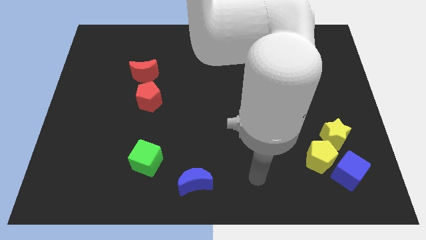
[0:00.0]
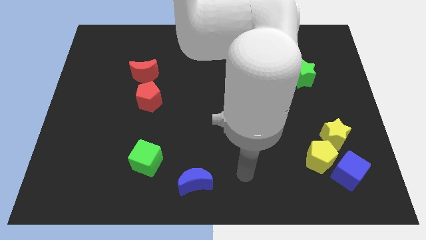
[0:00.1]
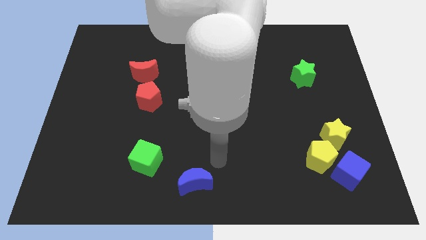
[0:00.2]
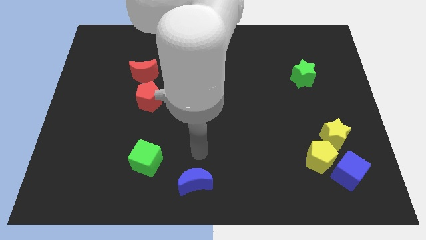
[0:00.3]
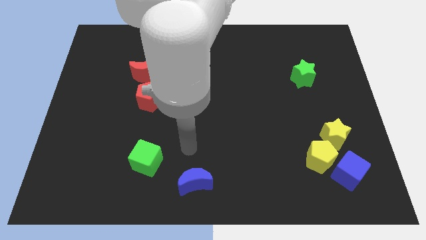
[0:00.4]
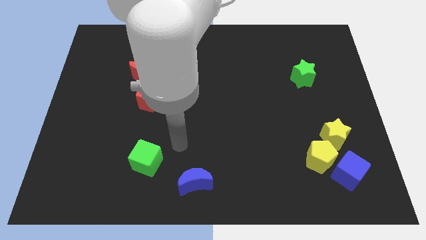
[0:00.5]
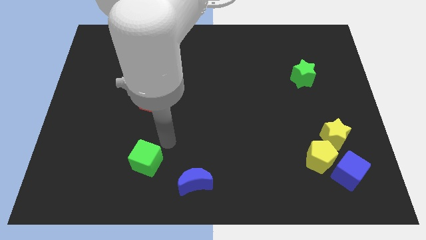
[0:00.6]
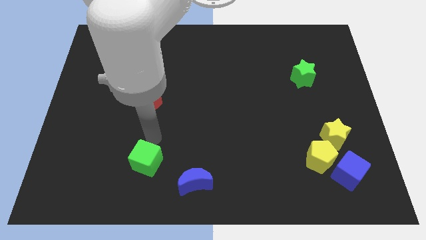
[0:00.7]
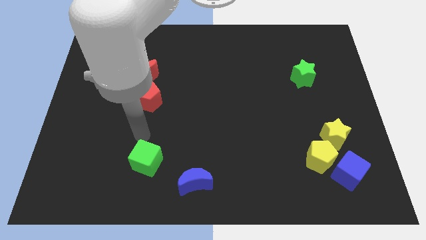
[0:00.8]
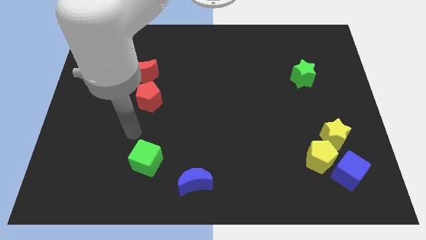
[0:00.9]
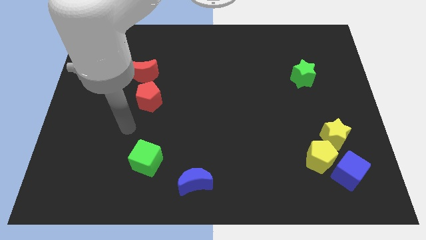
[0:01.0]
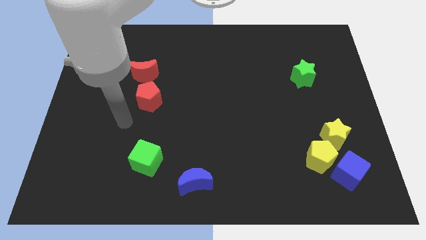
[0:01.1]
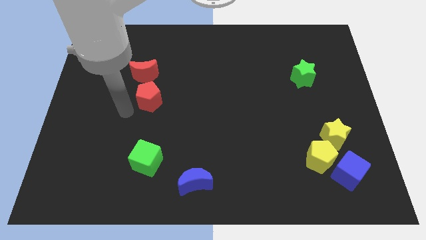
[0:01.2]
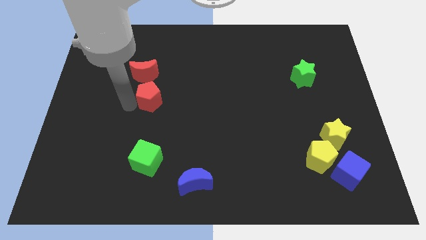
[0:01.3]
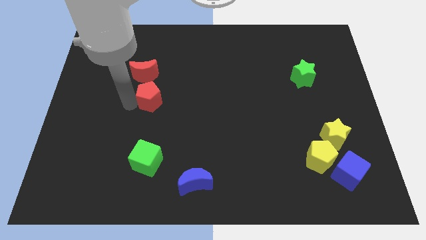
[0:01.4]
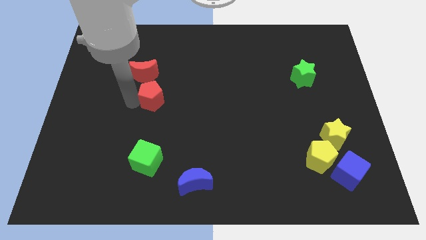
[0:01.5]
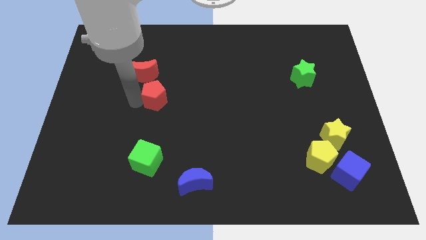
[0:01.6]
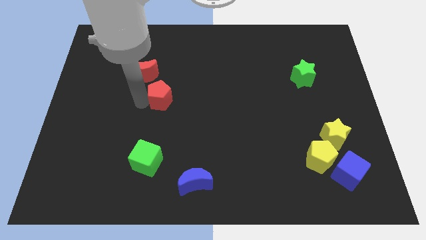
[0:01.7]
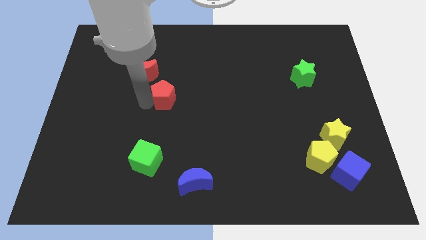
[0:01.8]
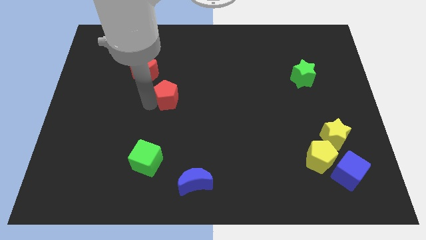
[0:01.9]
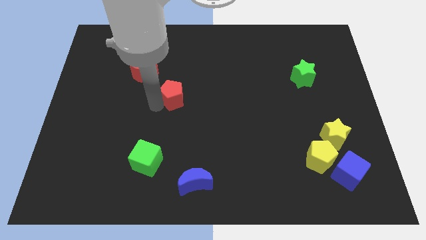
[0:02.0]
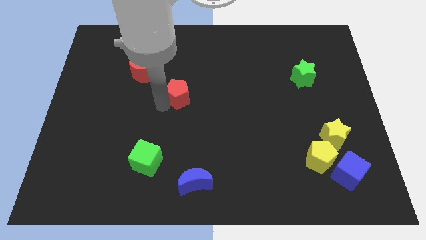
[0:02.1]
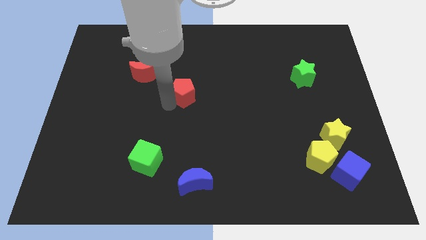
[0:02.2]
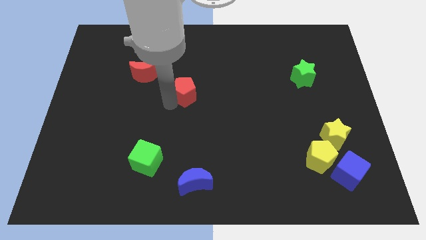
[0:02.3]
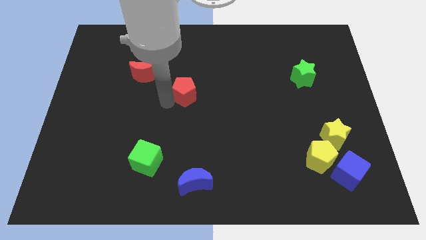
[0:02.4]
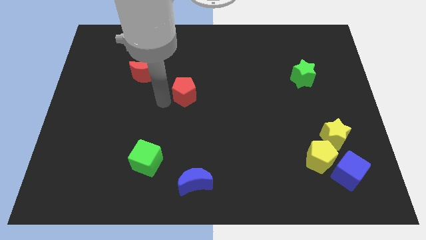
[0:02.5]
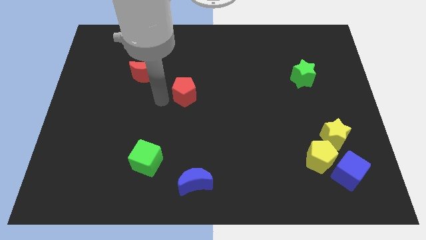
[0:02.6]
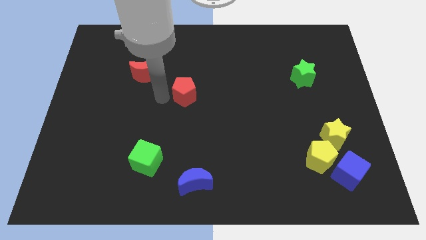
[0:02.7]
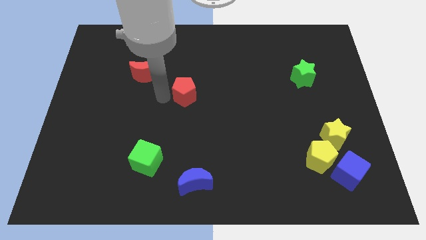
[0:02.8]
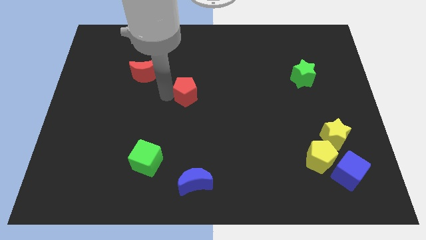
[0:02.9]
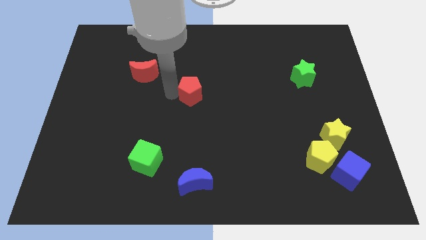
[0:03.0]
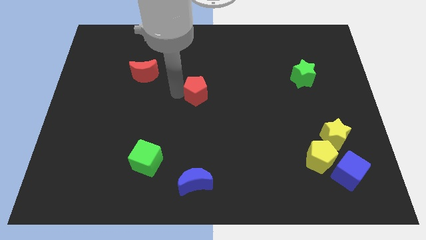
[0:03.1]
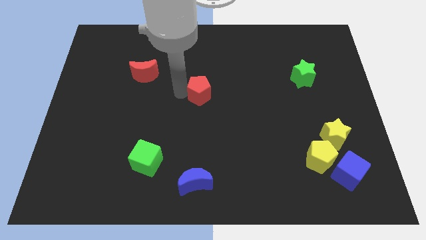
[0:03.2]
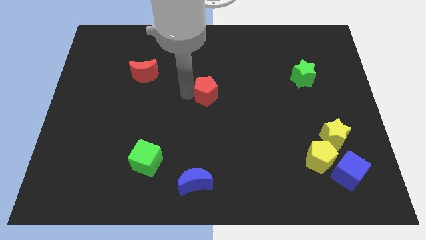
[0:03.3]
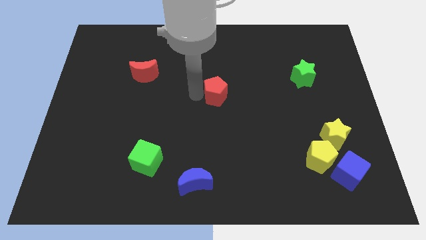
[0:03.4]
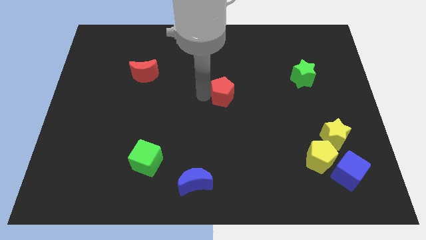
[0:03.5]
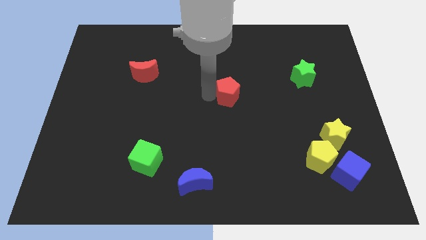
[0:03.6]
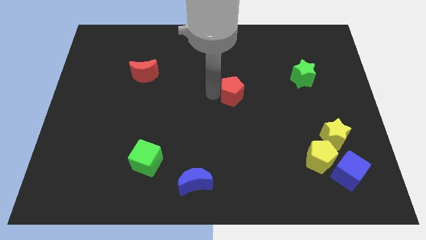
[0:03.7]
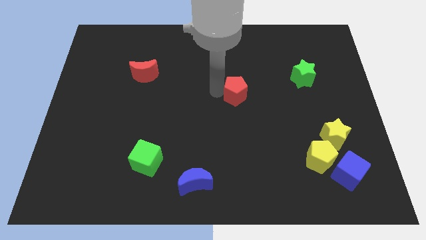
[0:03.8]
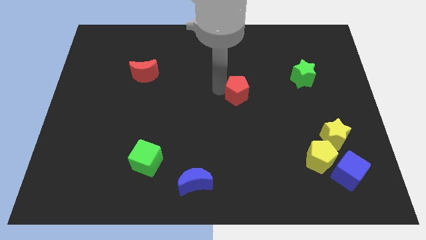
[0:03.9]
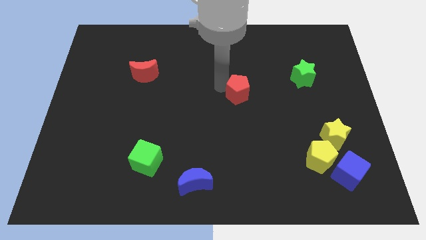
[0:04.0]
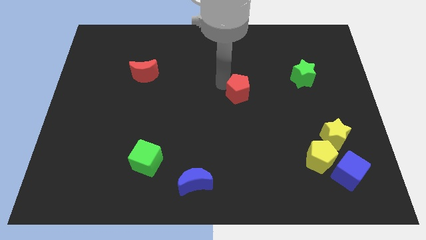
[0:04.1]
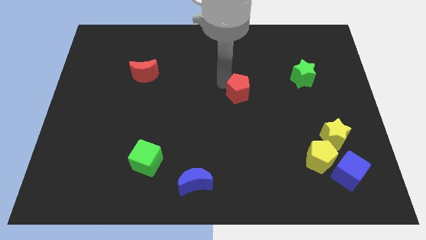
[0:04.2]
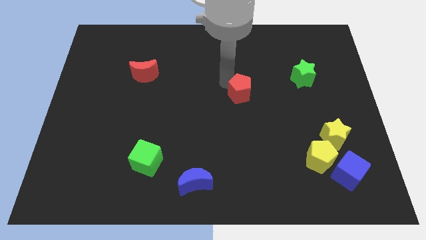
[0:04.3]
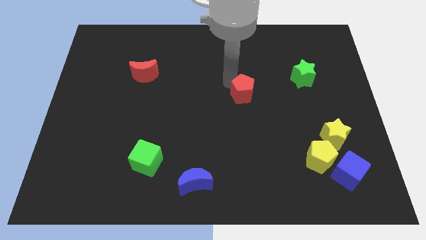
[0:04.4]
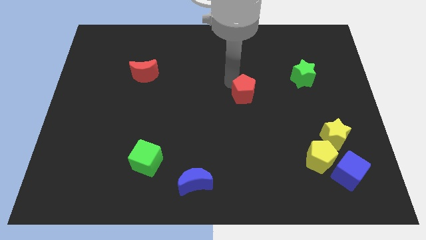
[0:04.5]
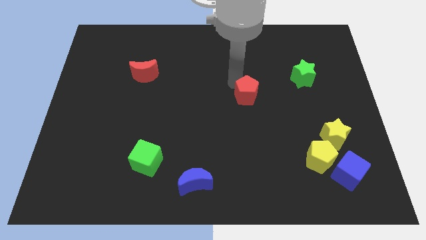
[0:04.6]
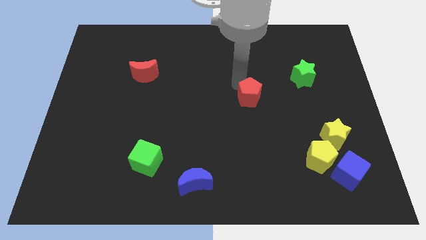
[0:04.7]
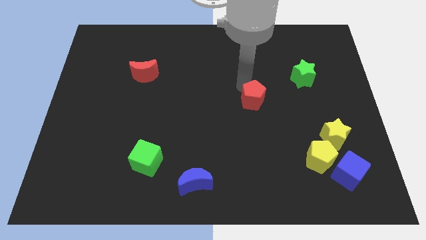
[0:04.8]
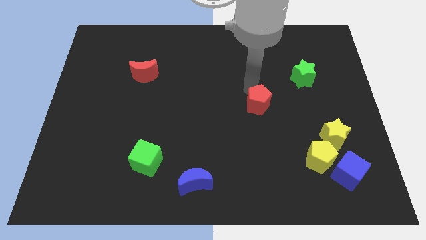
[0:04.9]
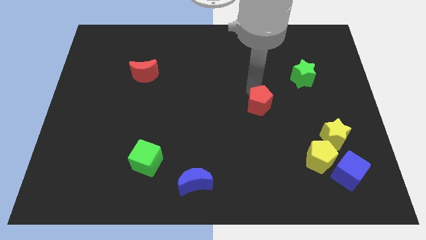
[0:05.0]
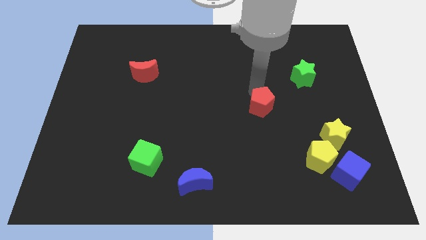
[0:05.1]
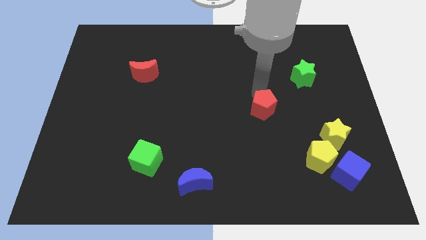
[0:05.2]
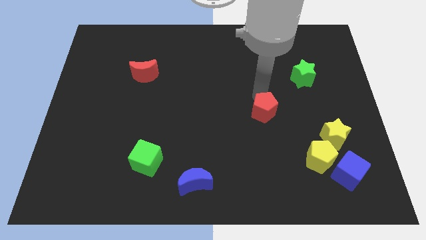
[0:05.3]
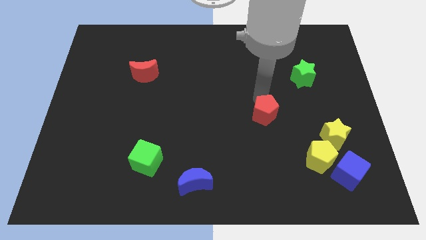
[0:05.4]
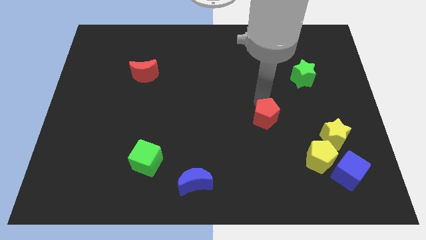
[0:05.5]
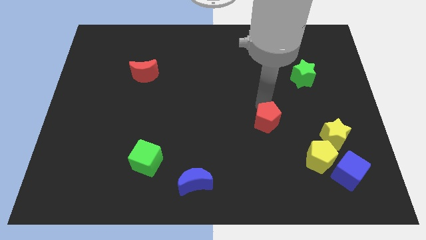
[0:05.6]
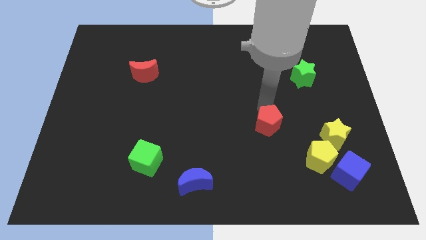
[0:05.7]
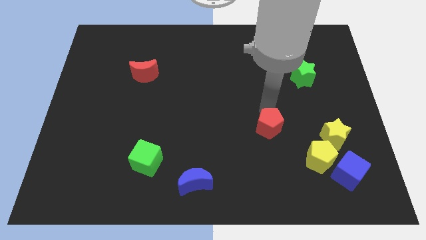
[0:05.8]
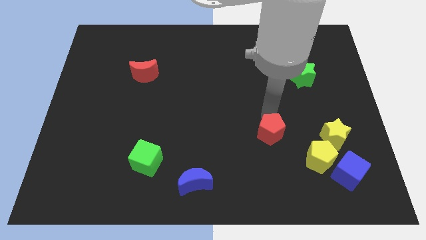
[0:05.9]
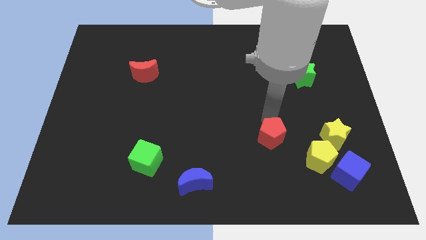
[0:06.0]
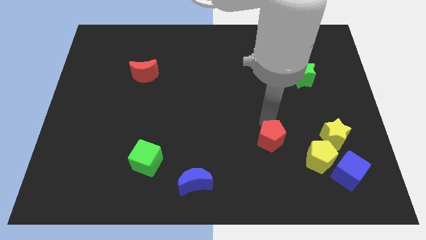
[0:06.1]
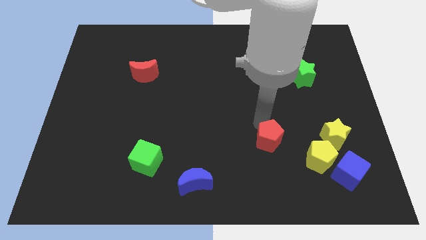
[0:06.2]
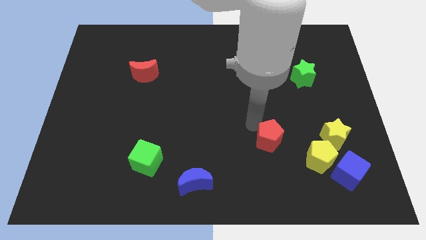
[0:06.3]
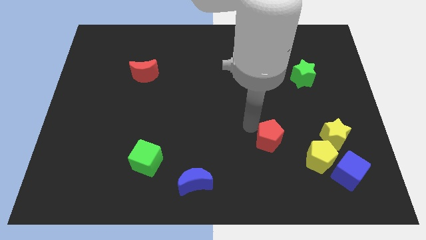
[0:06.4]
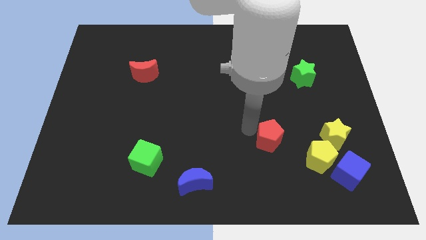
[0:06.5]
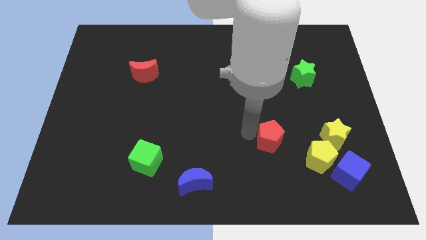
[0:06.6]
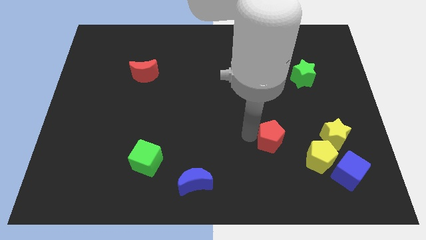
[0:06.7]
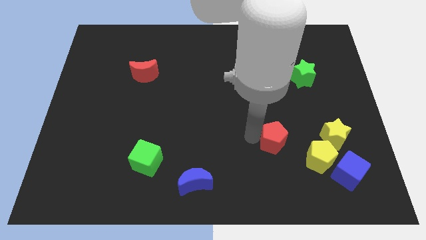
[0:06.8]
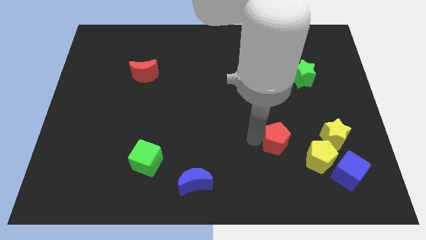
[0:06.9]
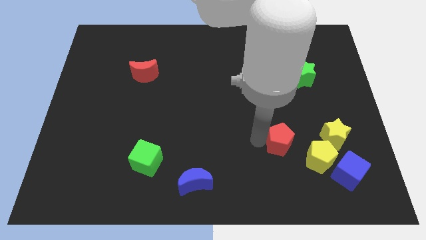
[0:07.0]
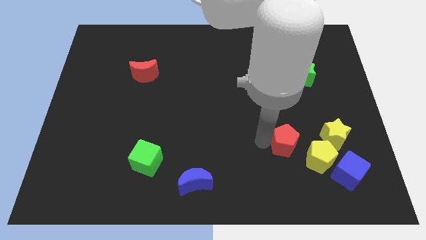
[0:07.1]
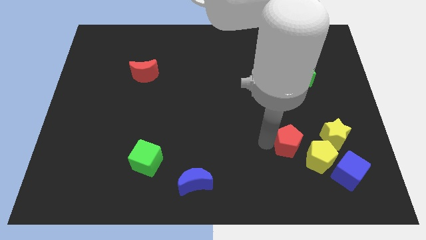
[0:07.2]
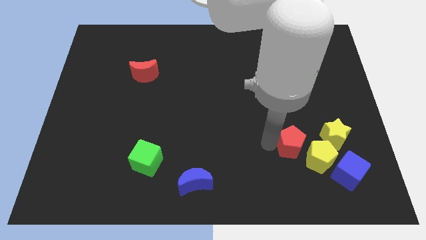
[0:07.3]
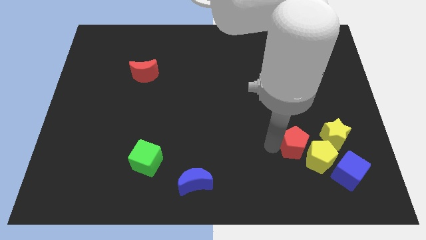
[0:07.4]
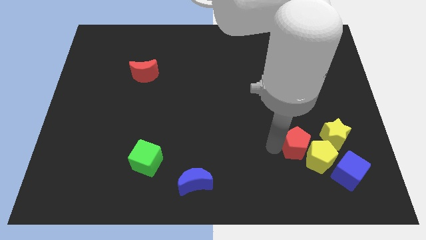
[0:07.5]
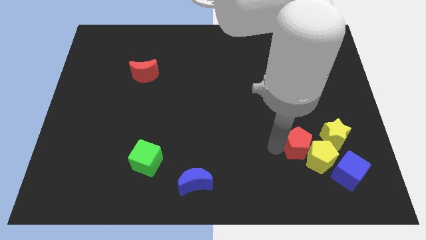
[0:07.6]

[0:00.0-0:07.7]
move the red pentagon next to the yellow pentagon

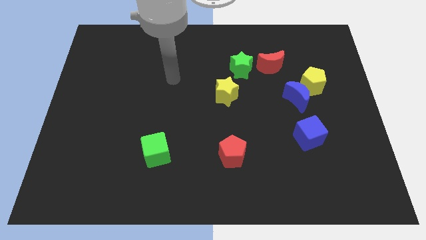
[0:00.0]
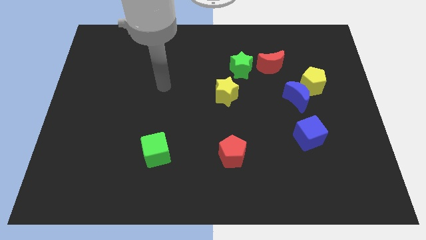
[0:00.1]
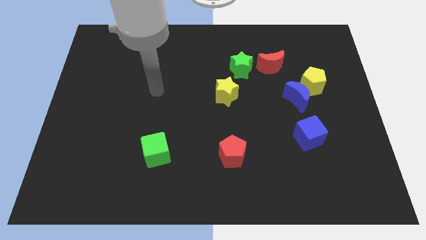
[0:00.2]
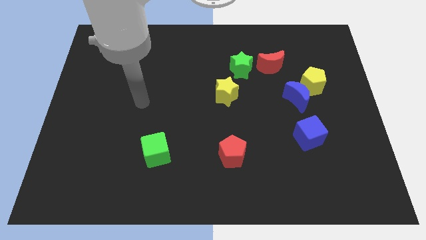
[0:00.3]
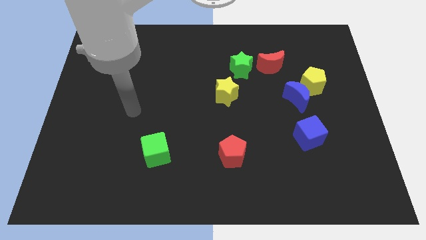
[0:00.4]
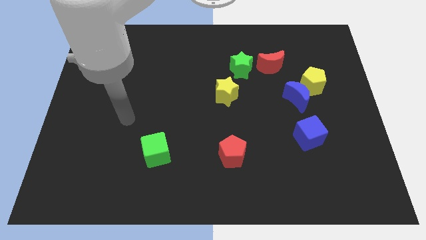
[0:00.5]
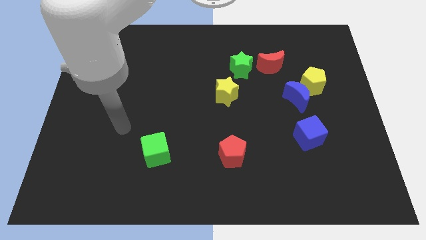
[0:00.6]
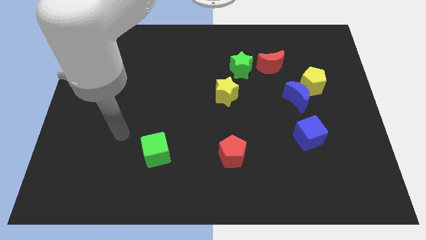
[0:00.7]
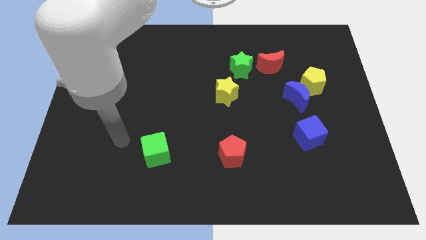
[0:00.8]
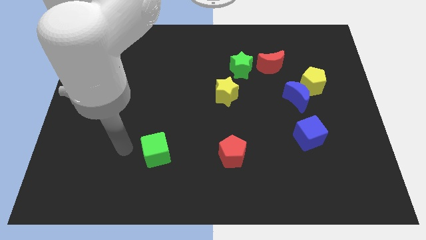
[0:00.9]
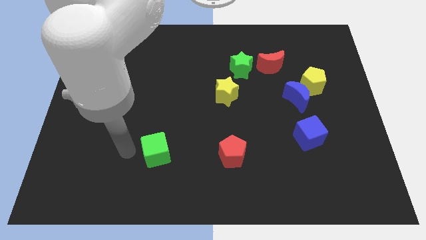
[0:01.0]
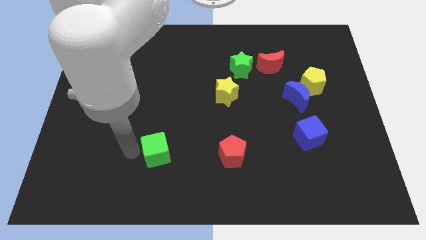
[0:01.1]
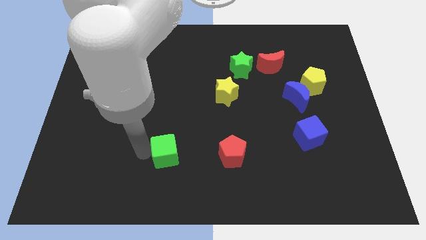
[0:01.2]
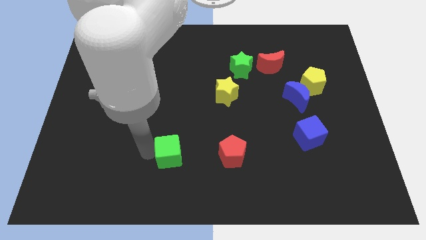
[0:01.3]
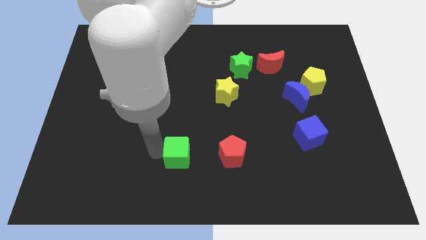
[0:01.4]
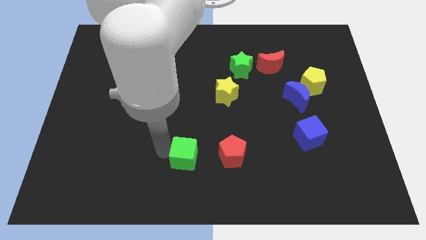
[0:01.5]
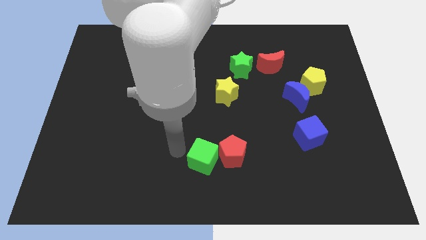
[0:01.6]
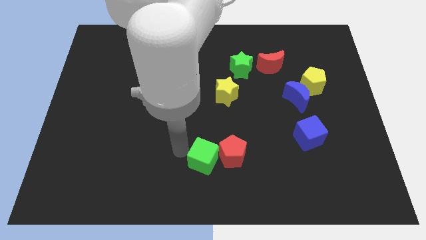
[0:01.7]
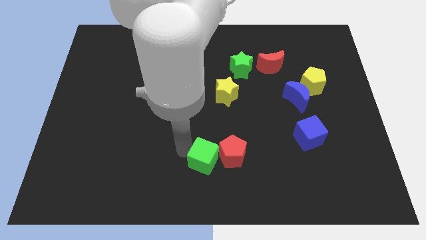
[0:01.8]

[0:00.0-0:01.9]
slide the green cube close to the red pentagon
